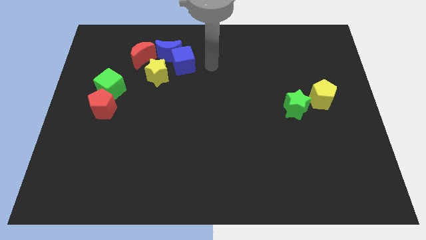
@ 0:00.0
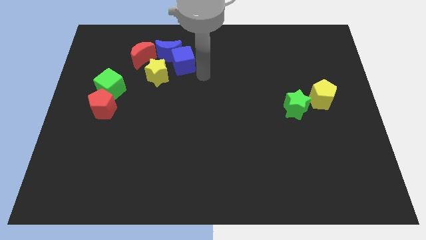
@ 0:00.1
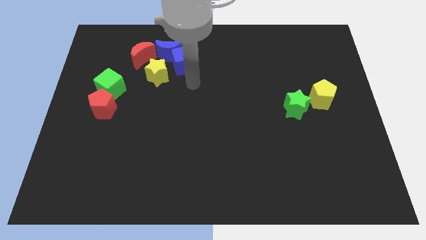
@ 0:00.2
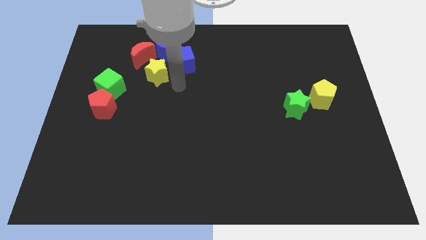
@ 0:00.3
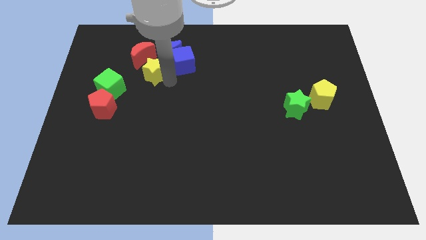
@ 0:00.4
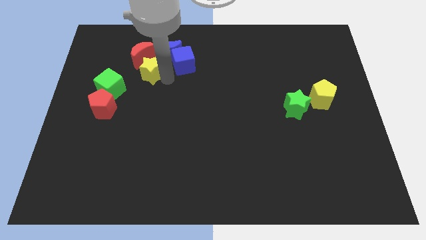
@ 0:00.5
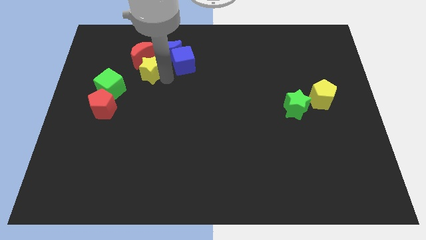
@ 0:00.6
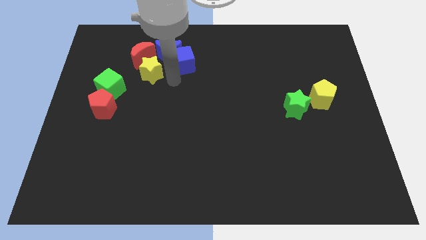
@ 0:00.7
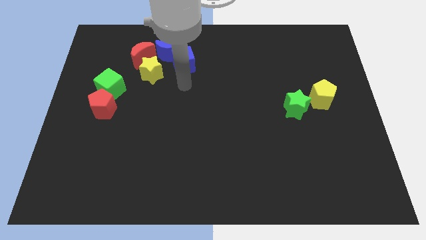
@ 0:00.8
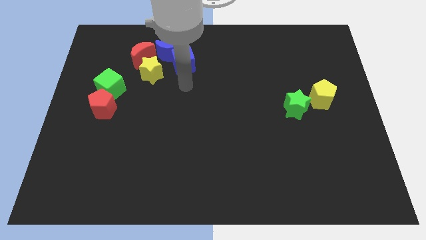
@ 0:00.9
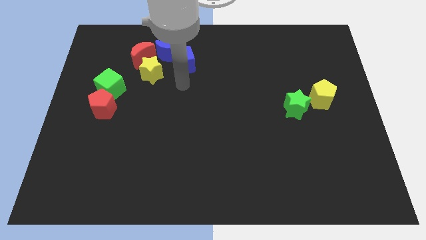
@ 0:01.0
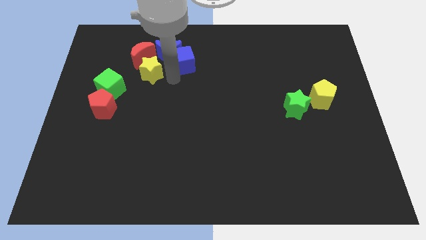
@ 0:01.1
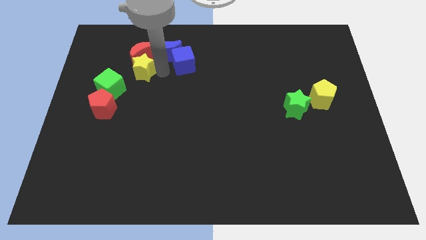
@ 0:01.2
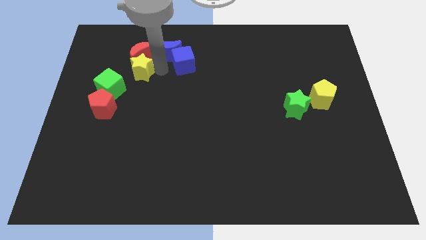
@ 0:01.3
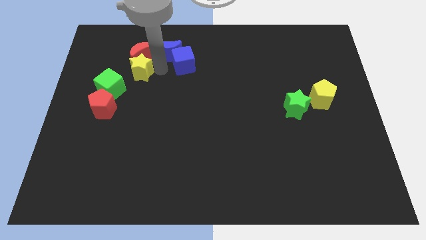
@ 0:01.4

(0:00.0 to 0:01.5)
push the yellow star into the red crescent

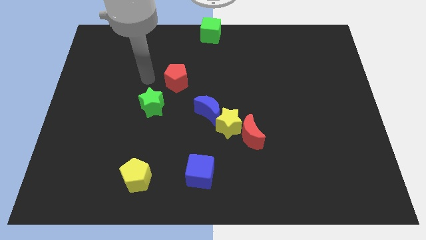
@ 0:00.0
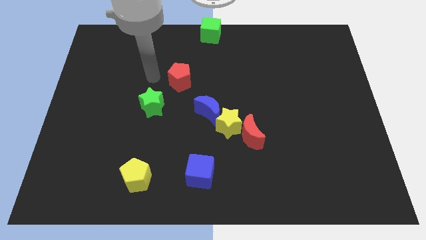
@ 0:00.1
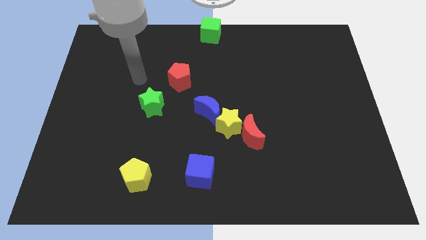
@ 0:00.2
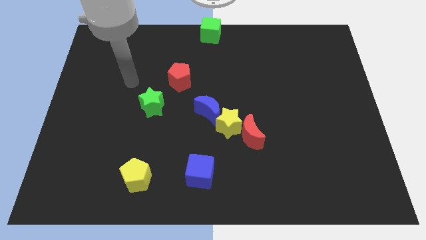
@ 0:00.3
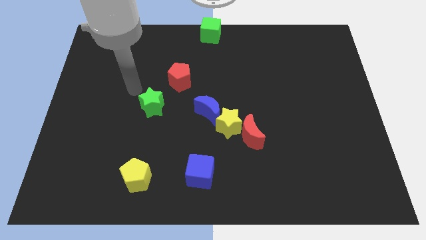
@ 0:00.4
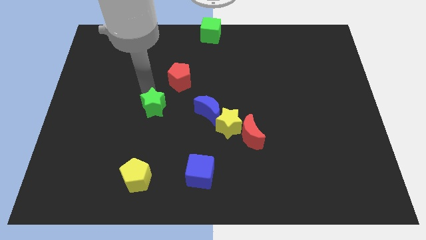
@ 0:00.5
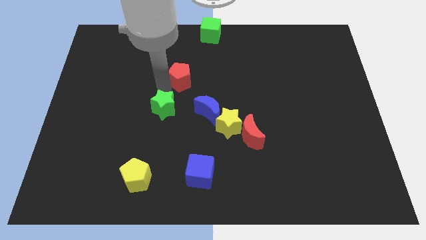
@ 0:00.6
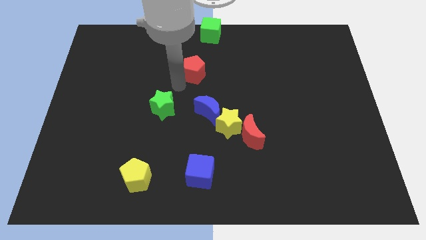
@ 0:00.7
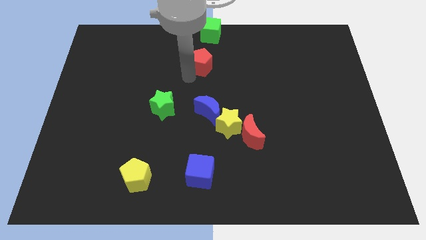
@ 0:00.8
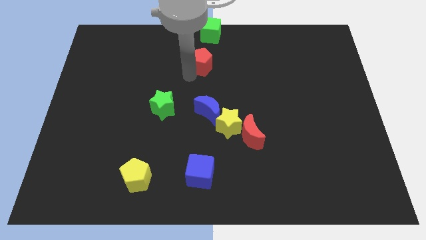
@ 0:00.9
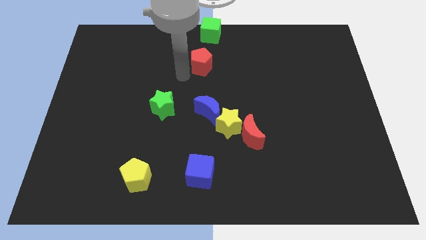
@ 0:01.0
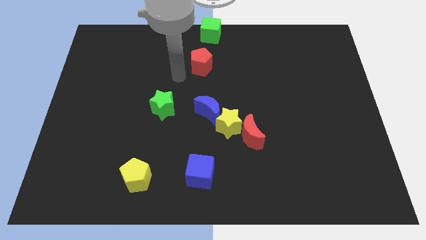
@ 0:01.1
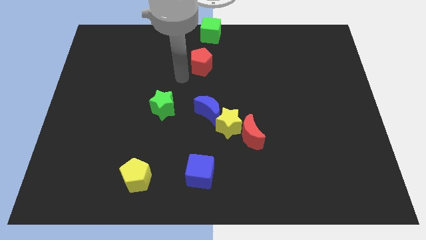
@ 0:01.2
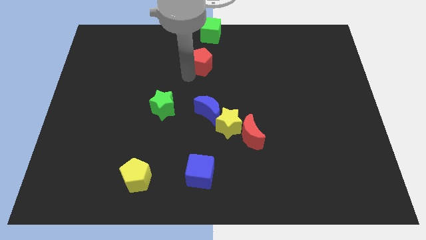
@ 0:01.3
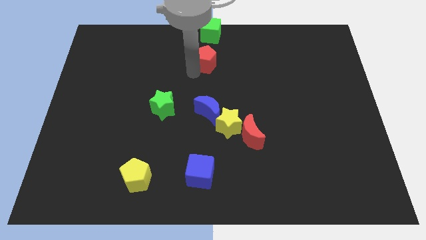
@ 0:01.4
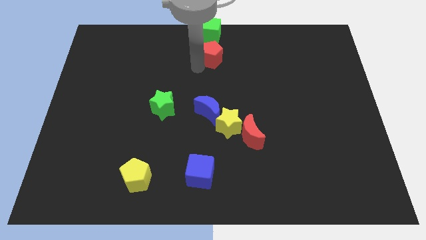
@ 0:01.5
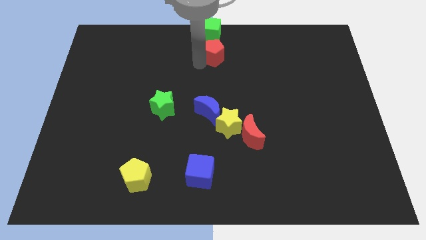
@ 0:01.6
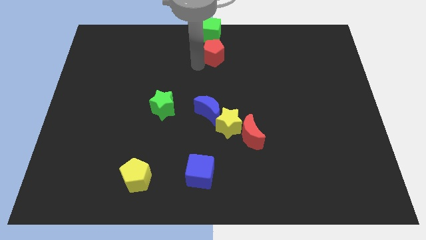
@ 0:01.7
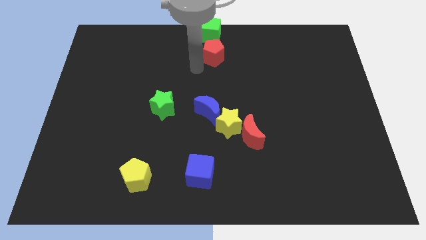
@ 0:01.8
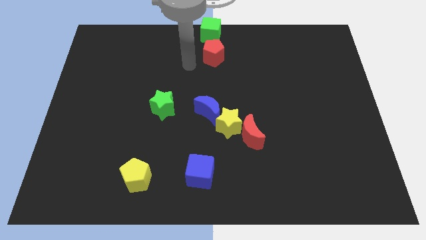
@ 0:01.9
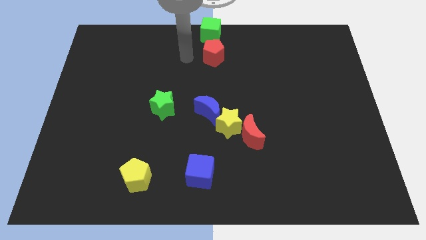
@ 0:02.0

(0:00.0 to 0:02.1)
move red pentagon into green cube

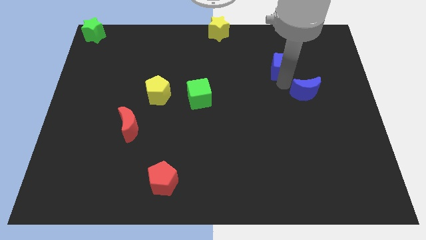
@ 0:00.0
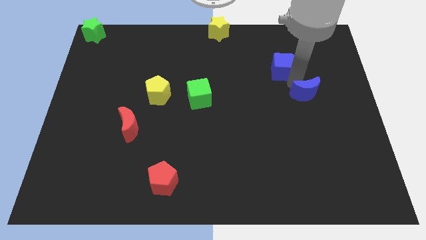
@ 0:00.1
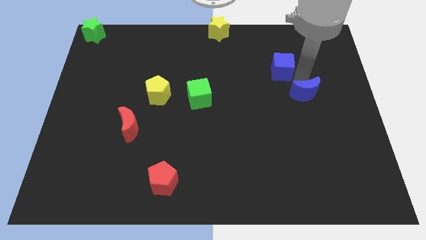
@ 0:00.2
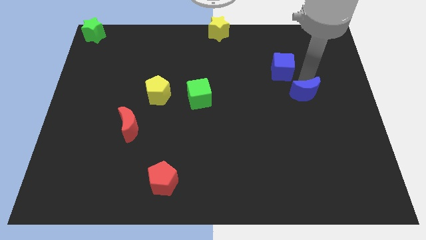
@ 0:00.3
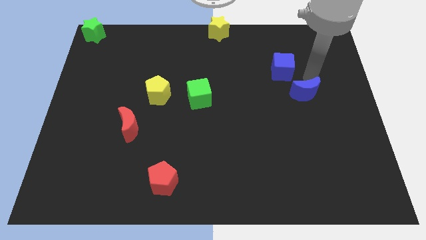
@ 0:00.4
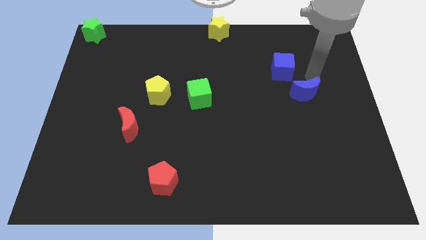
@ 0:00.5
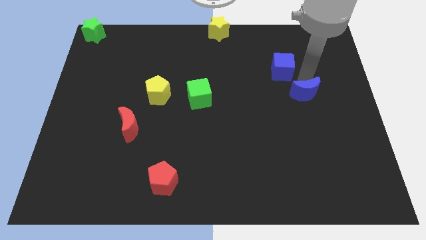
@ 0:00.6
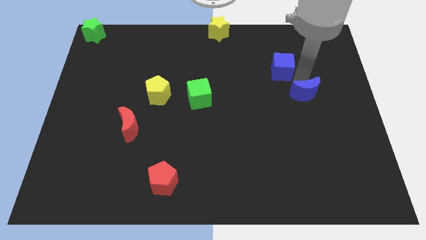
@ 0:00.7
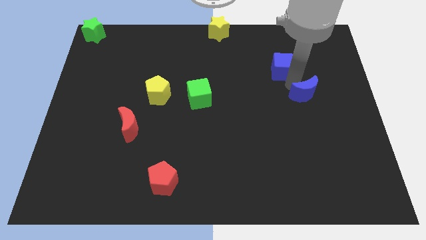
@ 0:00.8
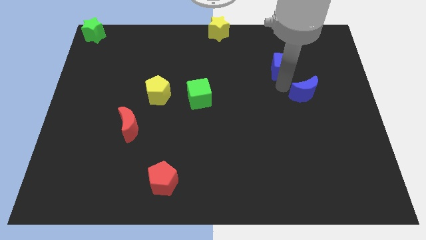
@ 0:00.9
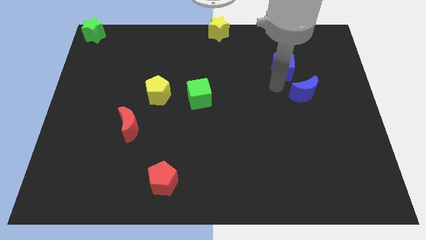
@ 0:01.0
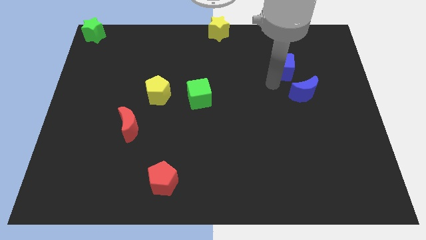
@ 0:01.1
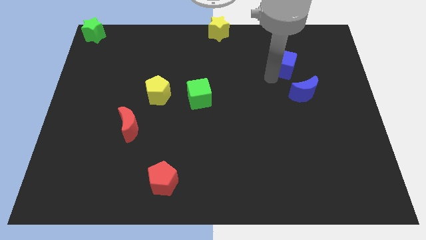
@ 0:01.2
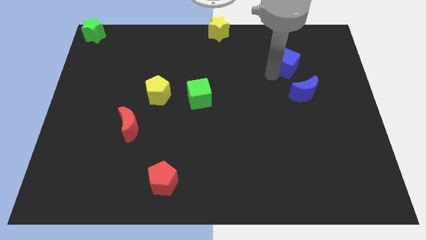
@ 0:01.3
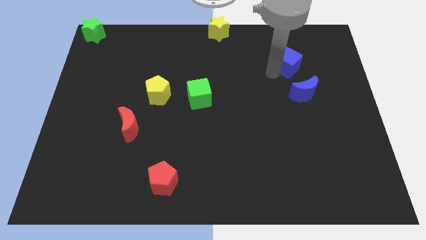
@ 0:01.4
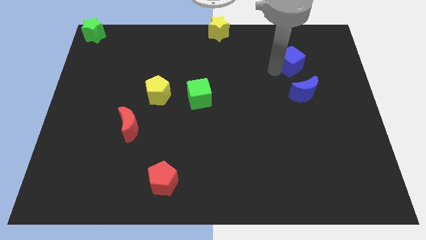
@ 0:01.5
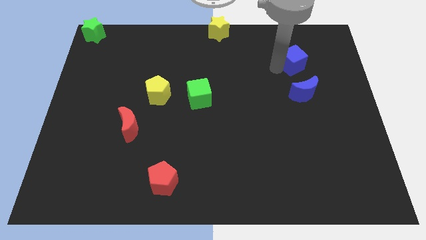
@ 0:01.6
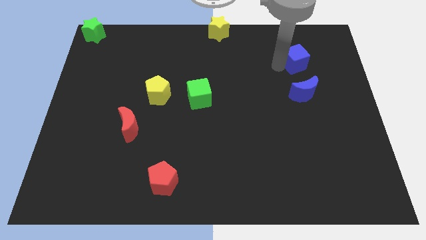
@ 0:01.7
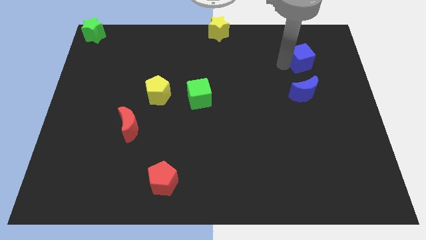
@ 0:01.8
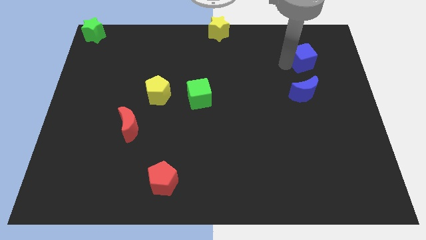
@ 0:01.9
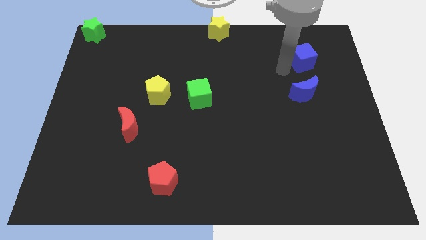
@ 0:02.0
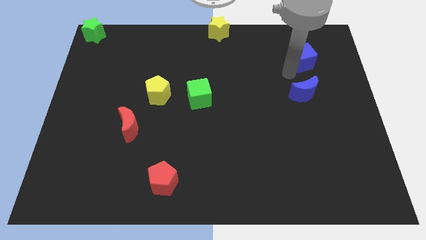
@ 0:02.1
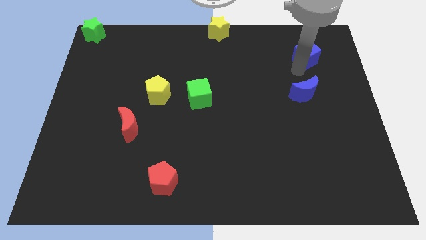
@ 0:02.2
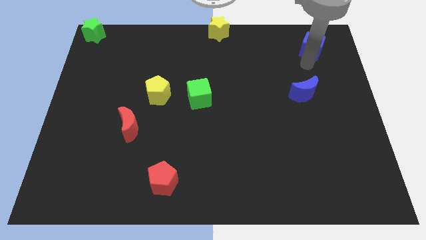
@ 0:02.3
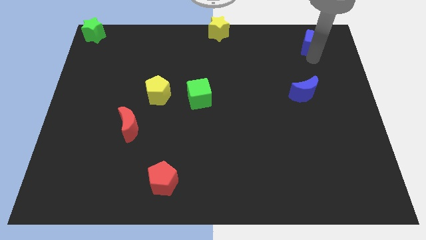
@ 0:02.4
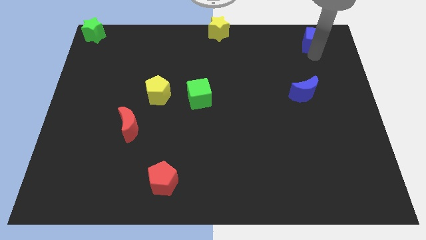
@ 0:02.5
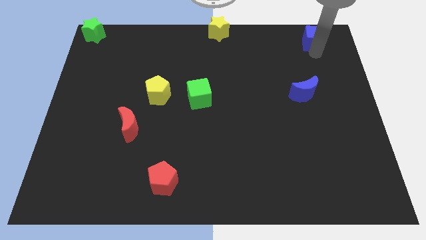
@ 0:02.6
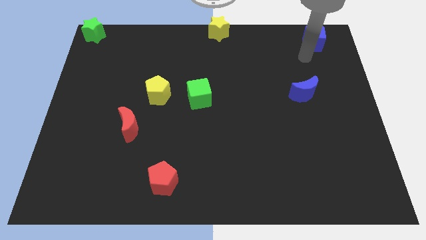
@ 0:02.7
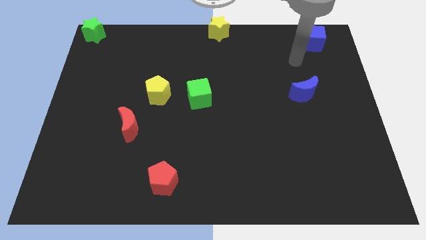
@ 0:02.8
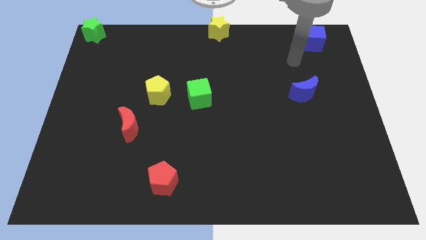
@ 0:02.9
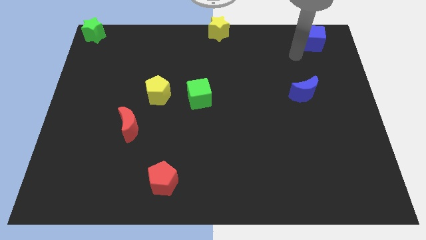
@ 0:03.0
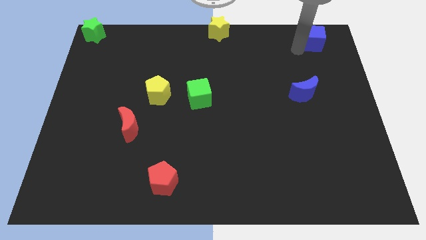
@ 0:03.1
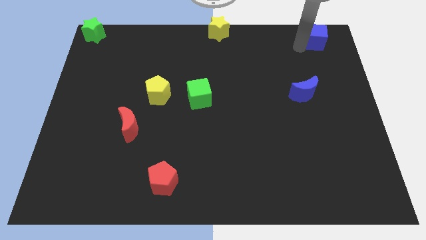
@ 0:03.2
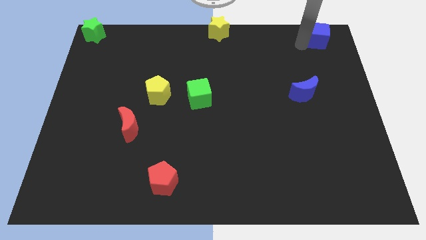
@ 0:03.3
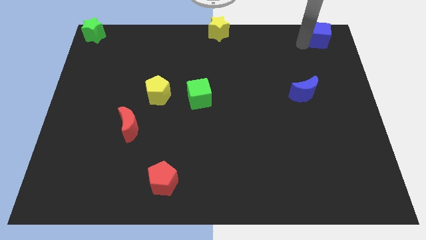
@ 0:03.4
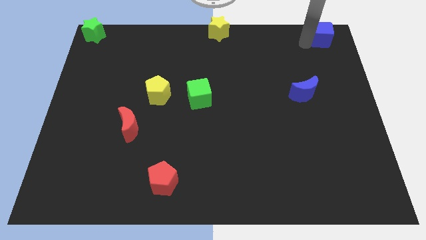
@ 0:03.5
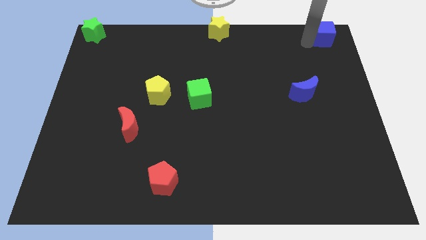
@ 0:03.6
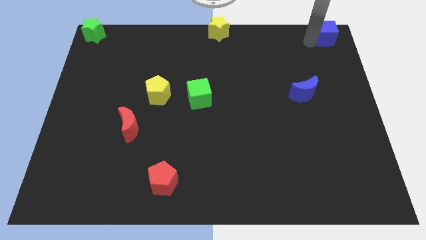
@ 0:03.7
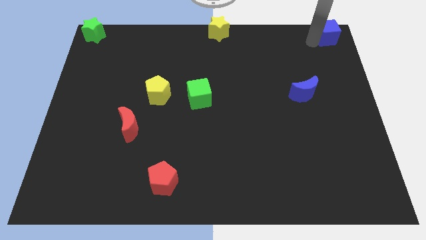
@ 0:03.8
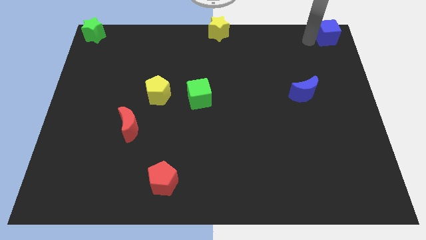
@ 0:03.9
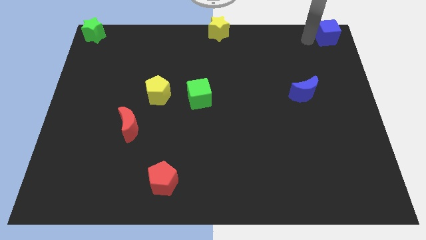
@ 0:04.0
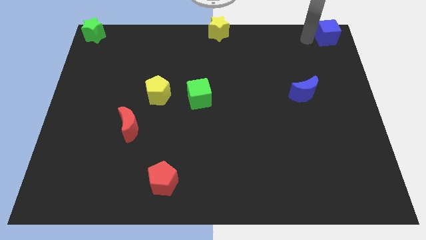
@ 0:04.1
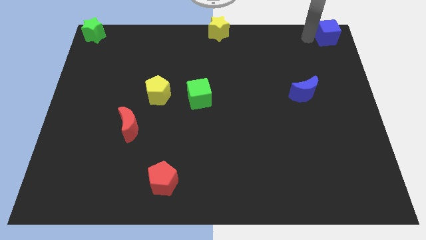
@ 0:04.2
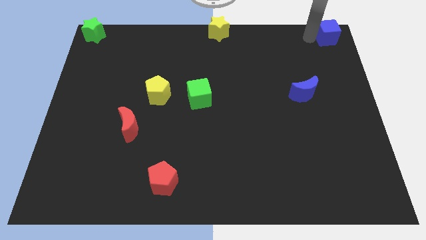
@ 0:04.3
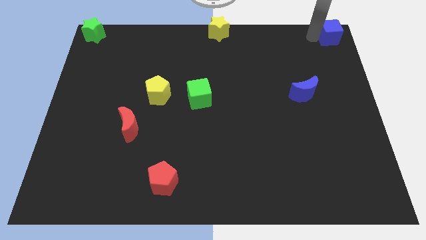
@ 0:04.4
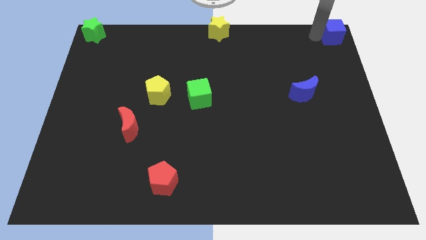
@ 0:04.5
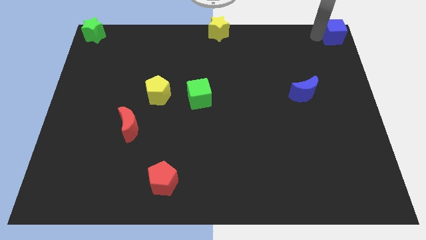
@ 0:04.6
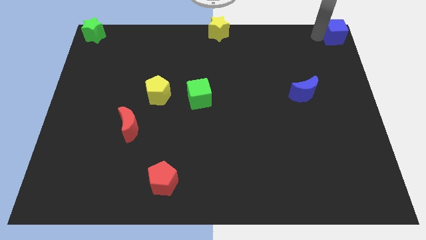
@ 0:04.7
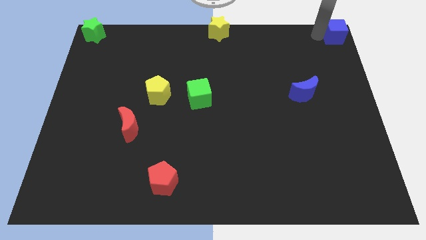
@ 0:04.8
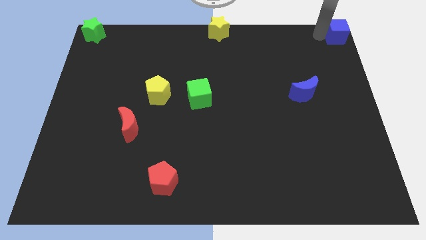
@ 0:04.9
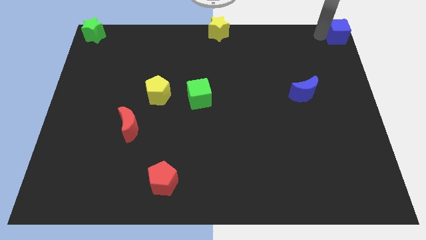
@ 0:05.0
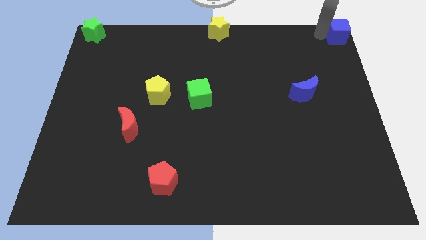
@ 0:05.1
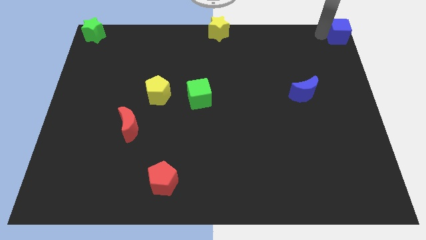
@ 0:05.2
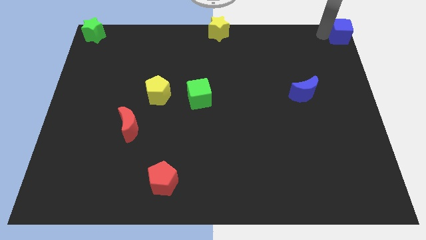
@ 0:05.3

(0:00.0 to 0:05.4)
move the blue cube parallel to yellow star
